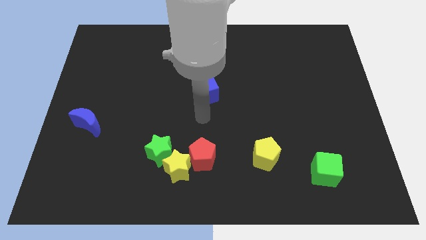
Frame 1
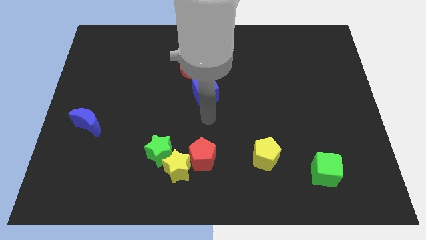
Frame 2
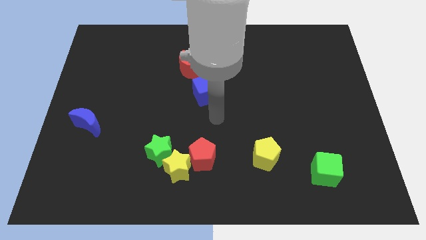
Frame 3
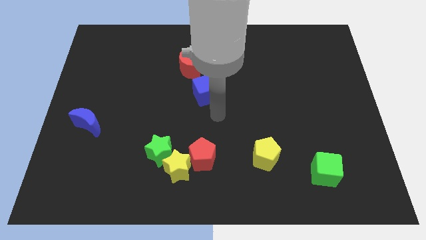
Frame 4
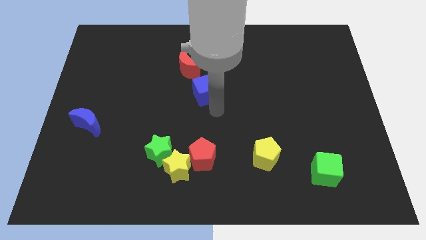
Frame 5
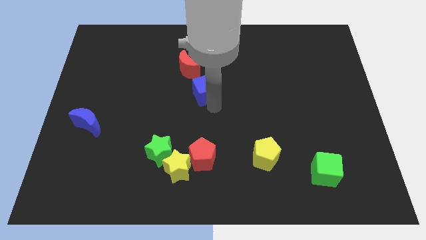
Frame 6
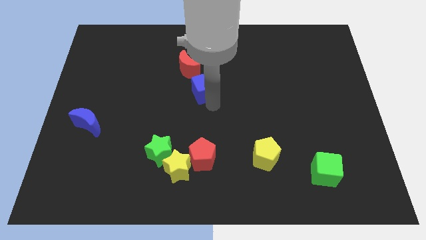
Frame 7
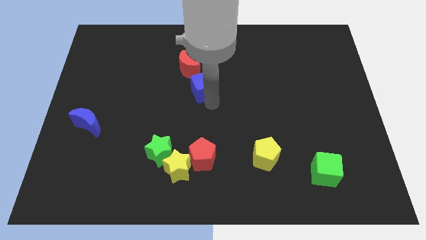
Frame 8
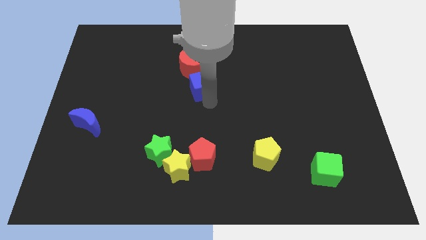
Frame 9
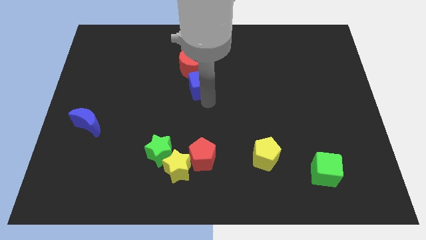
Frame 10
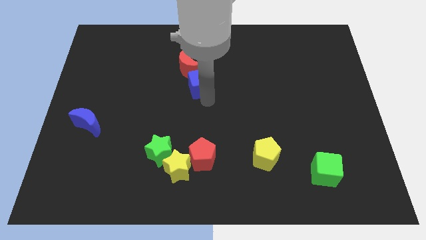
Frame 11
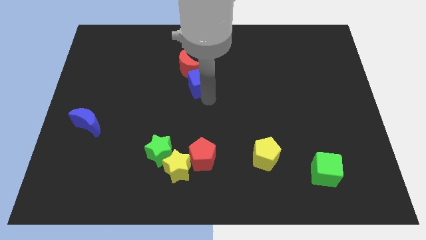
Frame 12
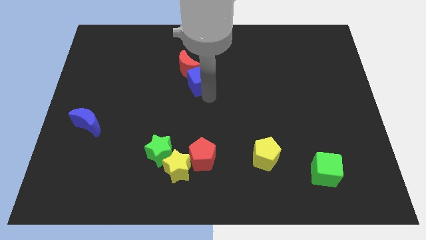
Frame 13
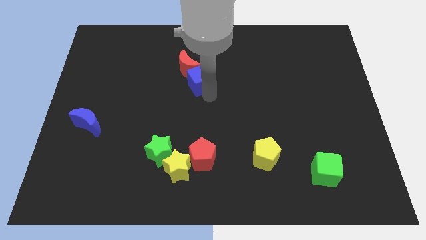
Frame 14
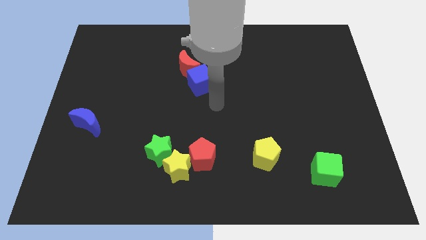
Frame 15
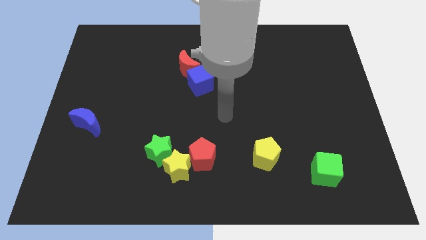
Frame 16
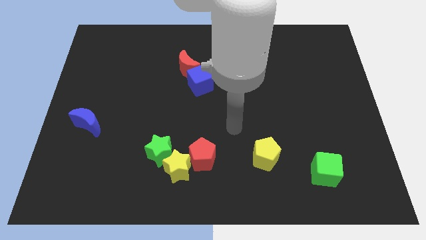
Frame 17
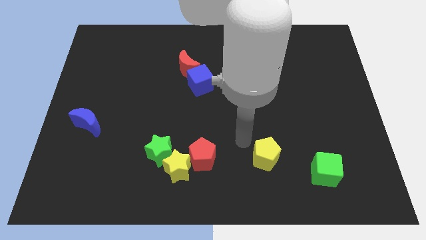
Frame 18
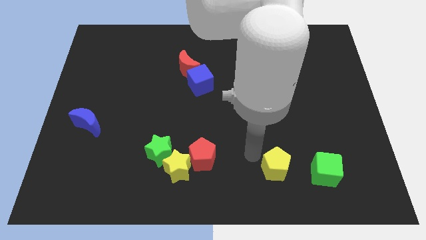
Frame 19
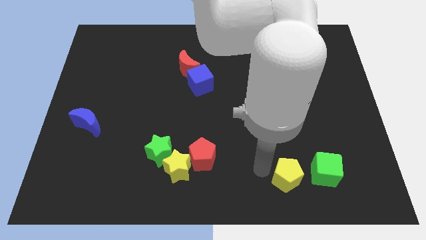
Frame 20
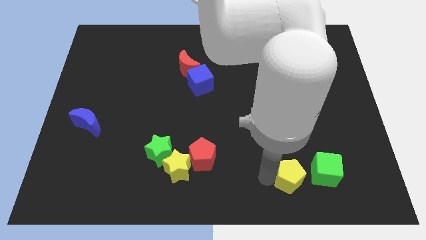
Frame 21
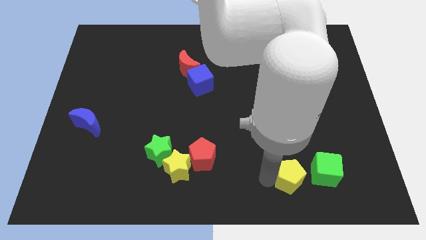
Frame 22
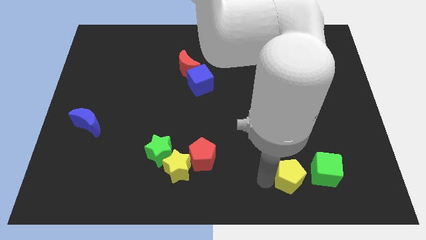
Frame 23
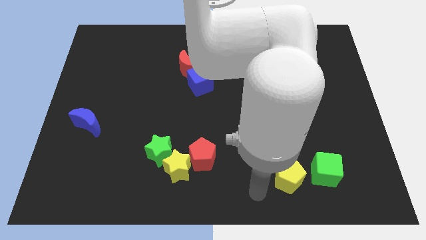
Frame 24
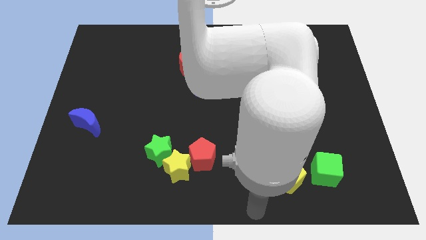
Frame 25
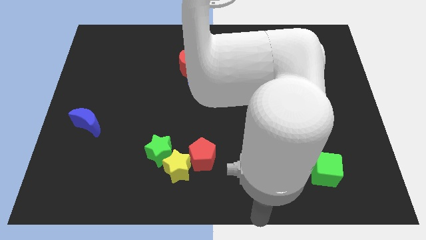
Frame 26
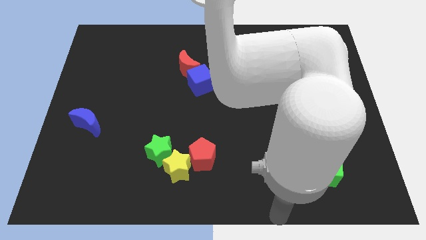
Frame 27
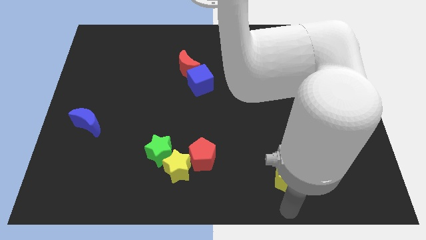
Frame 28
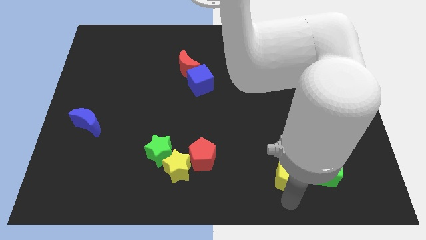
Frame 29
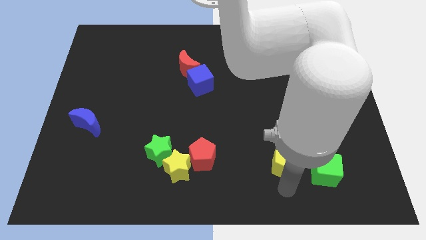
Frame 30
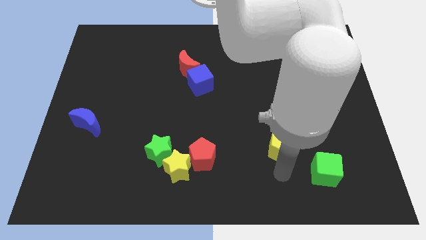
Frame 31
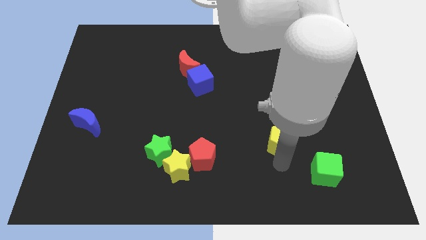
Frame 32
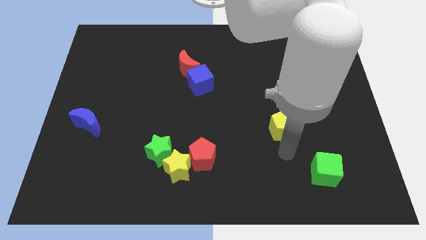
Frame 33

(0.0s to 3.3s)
attach the blue cube to the red moon

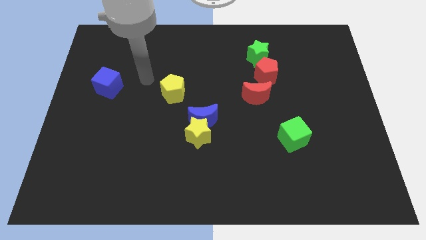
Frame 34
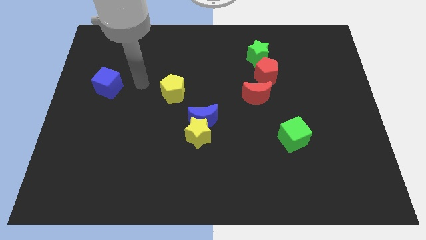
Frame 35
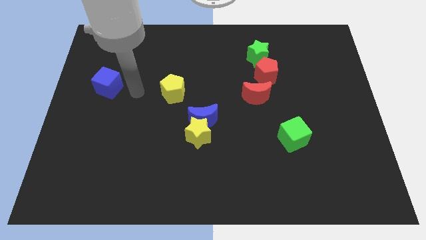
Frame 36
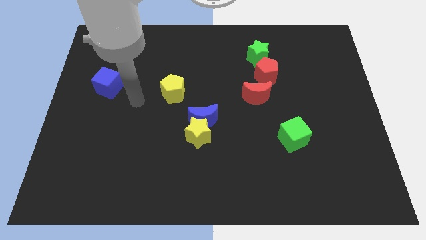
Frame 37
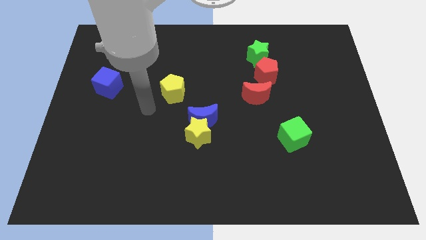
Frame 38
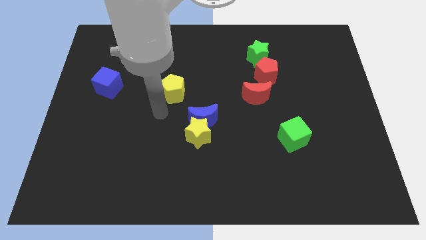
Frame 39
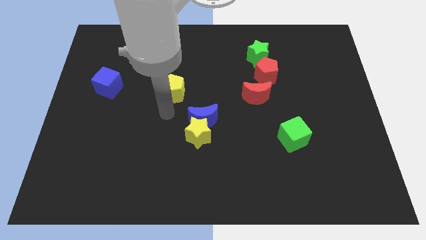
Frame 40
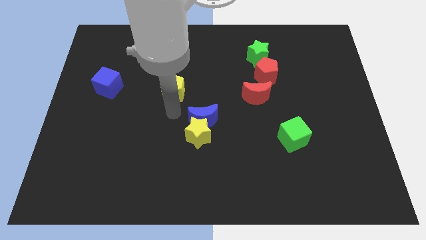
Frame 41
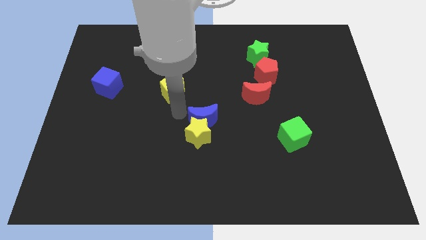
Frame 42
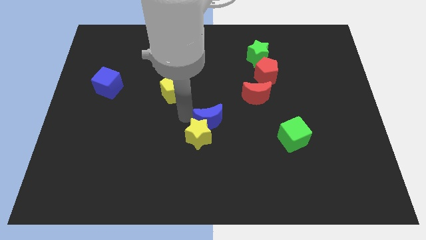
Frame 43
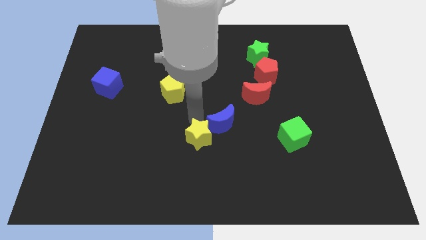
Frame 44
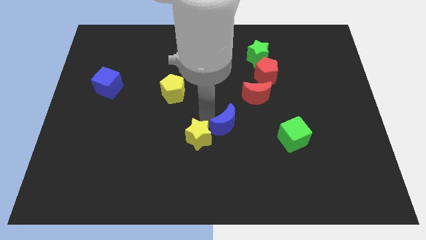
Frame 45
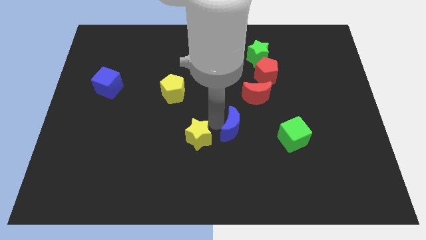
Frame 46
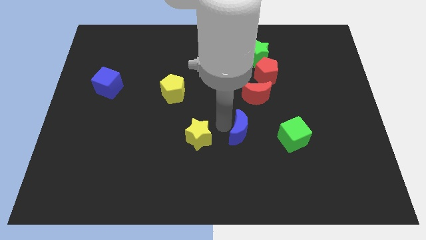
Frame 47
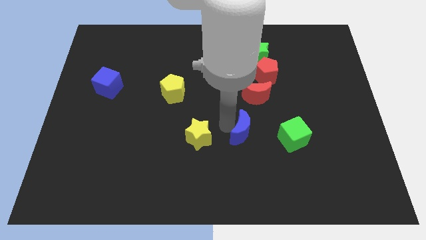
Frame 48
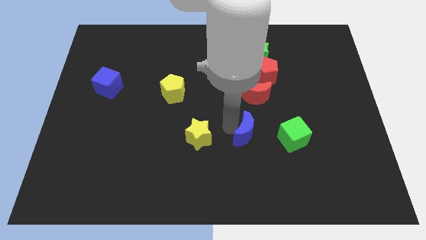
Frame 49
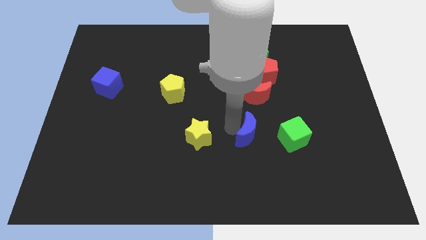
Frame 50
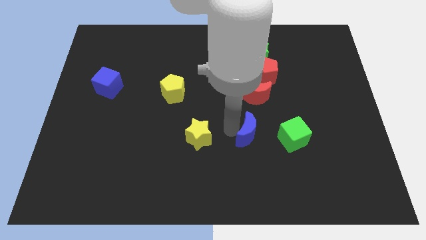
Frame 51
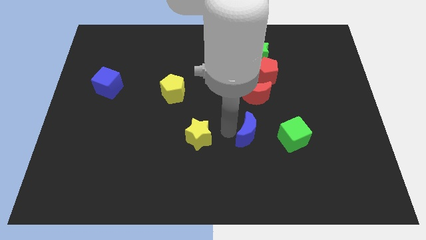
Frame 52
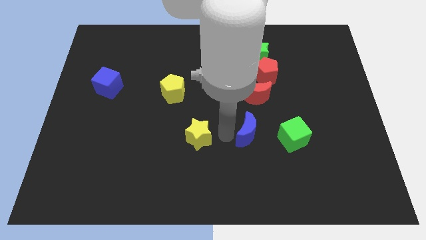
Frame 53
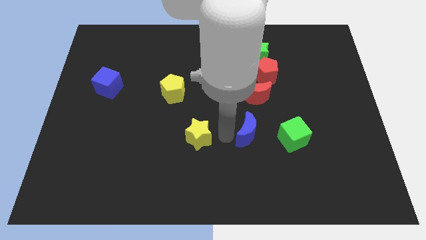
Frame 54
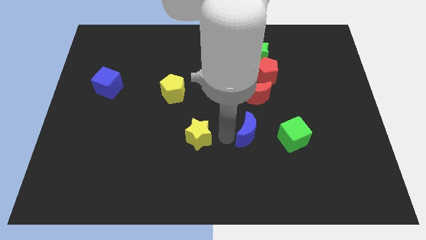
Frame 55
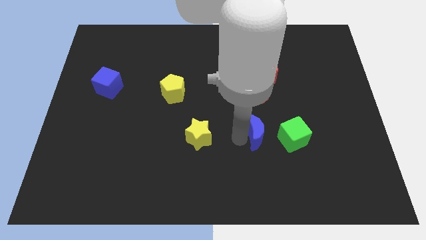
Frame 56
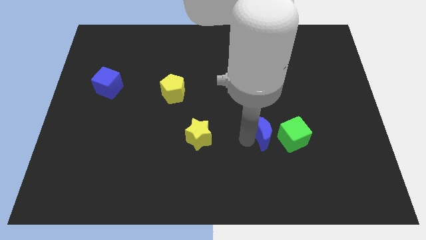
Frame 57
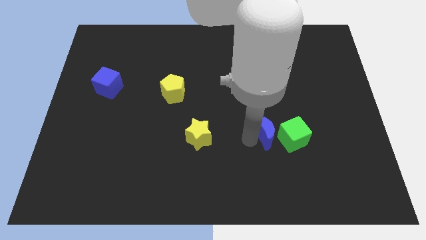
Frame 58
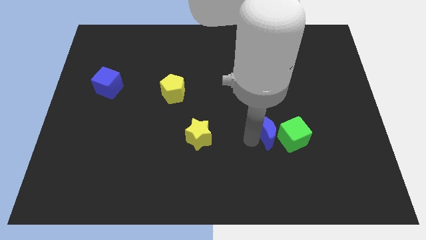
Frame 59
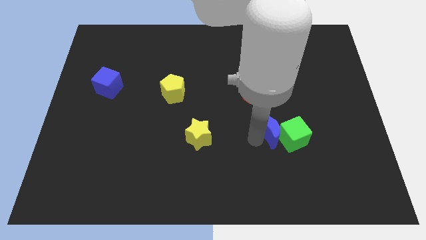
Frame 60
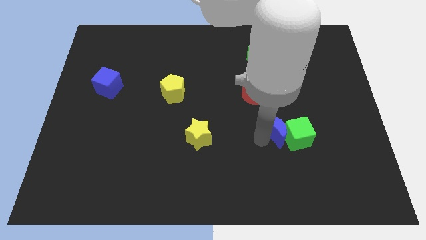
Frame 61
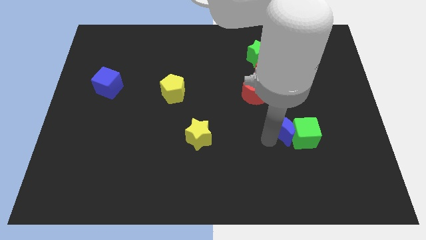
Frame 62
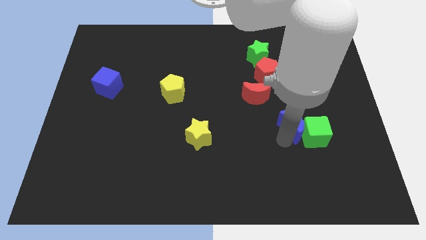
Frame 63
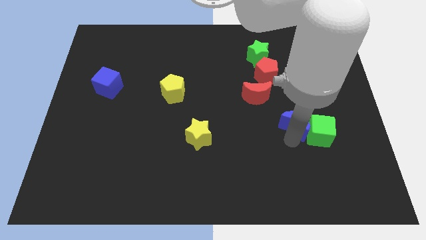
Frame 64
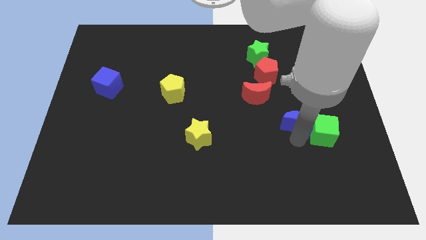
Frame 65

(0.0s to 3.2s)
push the blue moon into the green cube

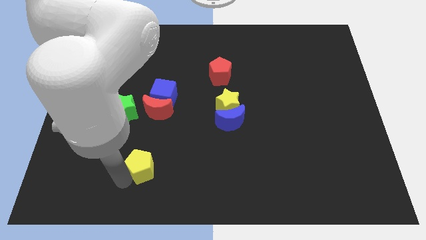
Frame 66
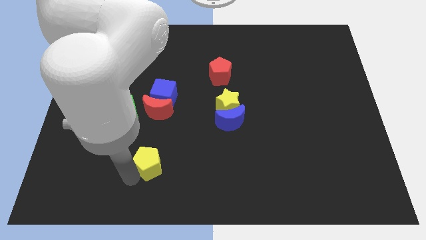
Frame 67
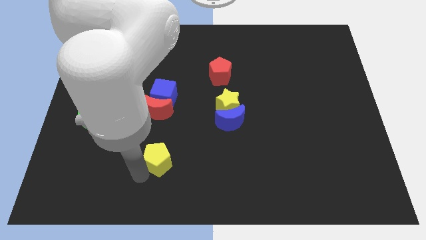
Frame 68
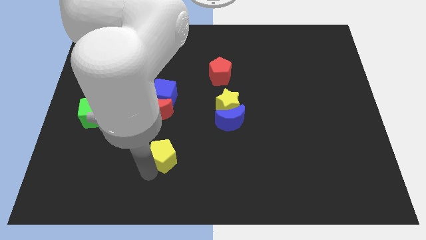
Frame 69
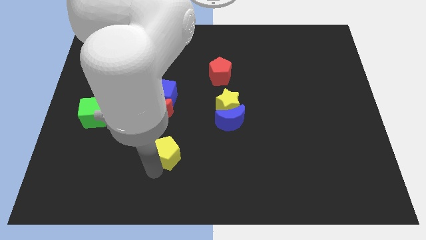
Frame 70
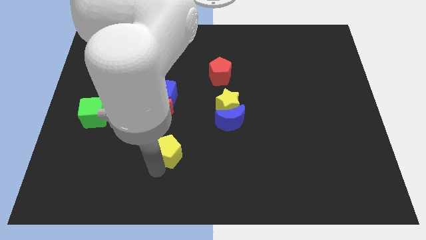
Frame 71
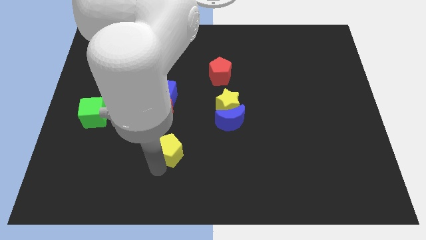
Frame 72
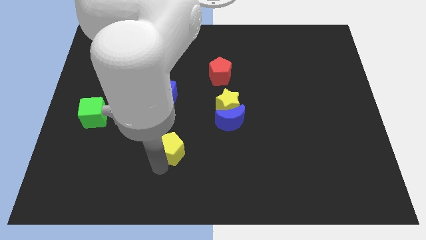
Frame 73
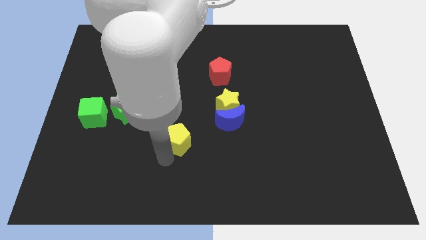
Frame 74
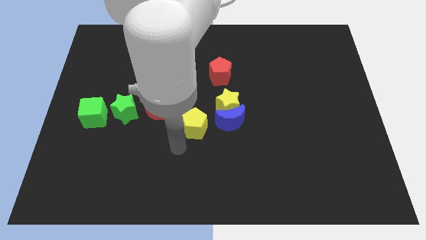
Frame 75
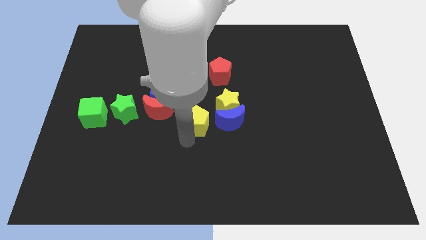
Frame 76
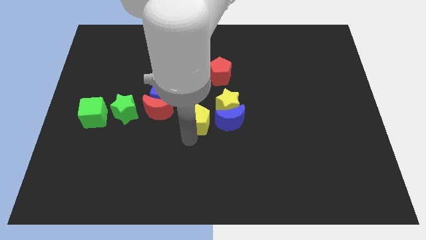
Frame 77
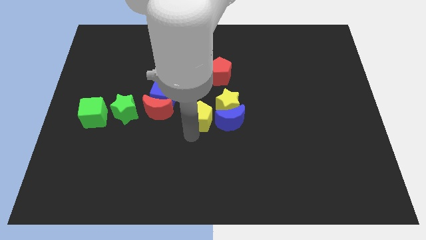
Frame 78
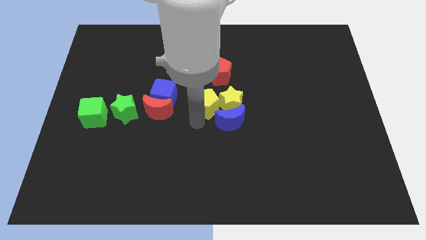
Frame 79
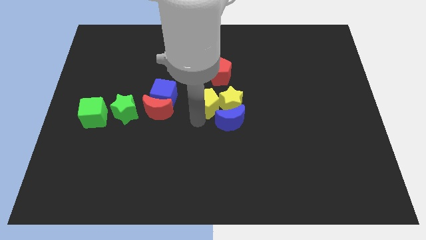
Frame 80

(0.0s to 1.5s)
move the yellow pentagon left to the yellow star

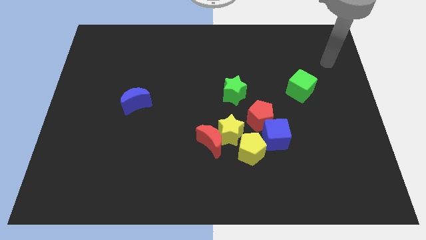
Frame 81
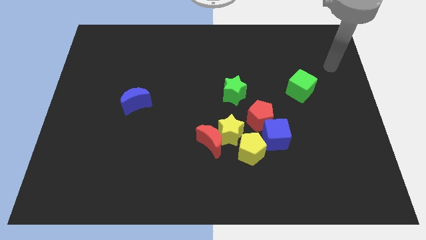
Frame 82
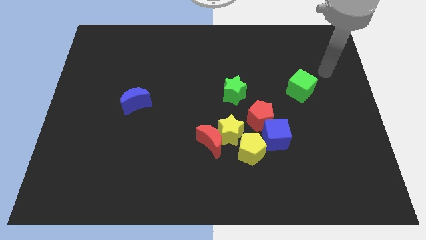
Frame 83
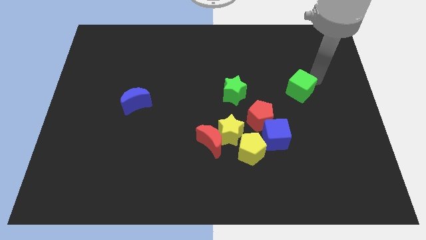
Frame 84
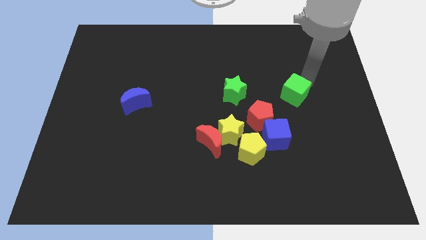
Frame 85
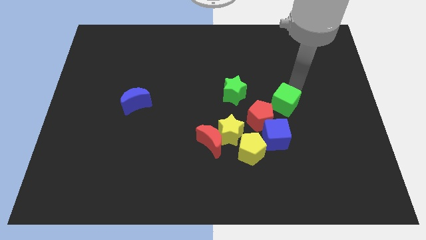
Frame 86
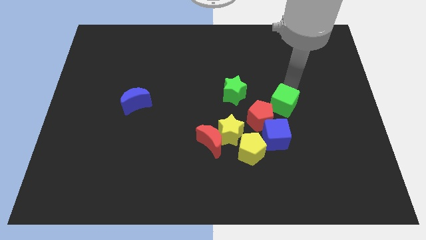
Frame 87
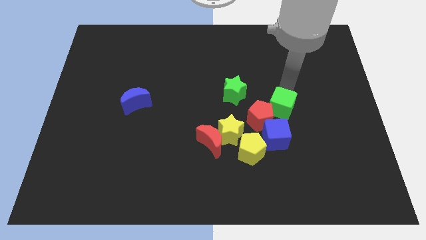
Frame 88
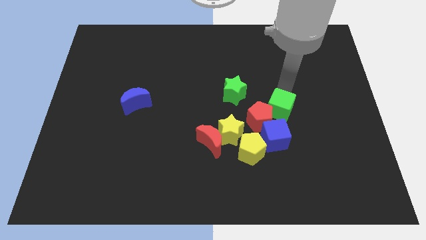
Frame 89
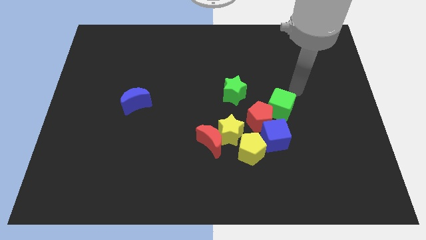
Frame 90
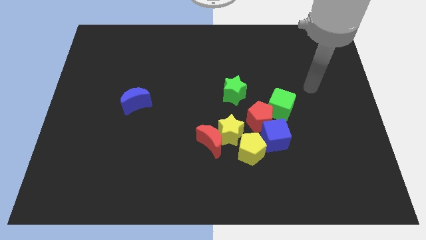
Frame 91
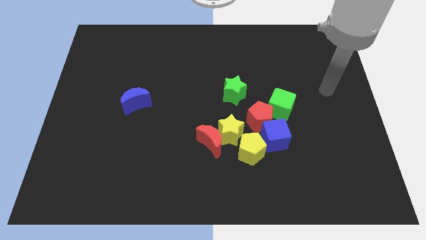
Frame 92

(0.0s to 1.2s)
move the green cube to the top right side of the red pentagon
